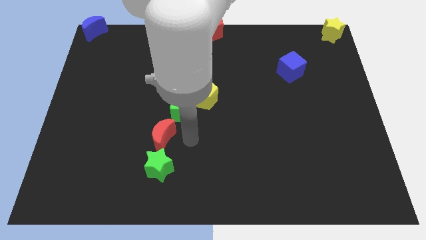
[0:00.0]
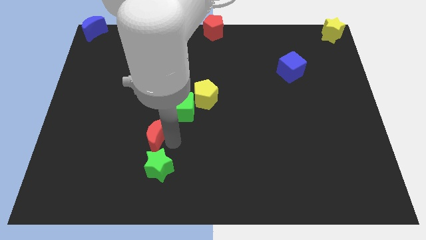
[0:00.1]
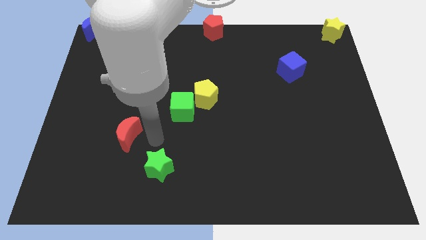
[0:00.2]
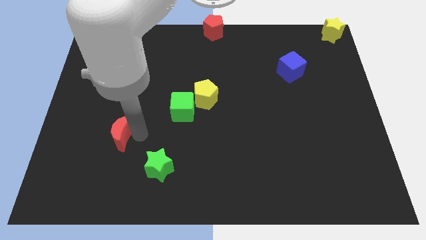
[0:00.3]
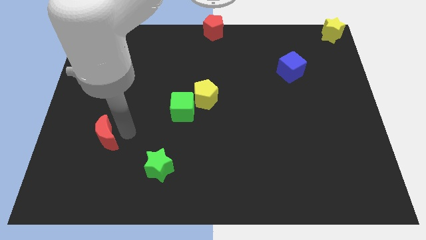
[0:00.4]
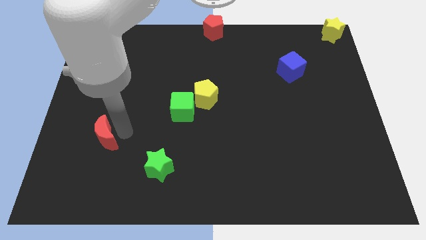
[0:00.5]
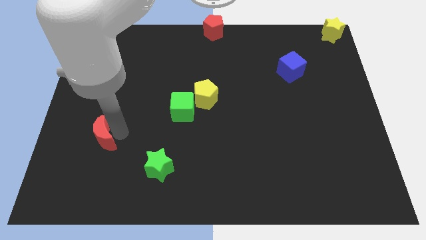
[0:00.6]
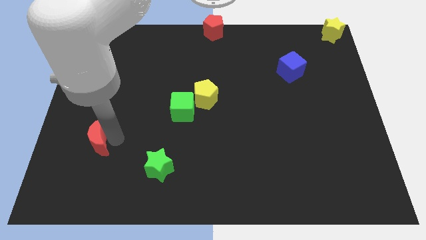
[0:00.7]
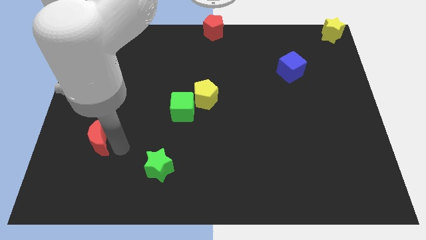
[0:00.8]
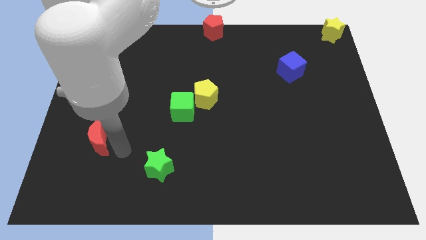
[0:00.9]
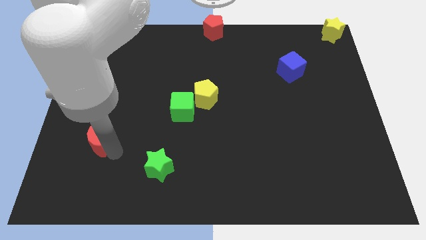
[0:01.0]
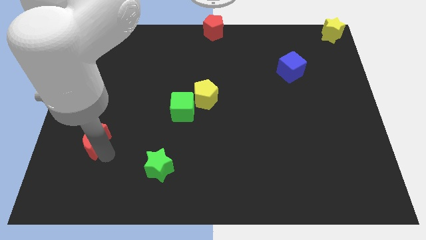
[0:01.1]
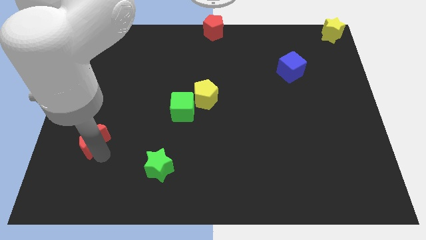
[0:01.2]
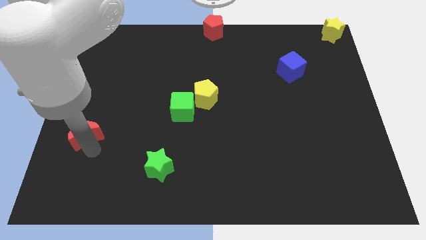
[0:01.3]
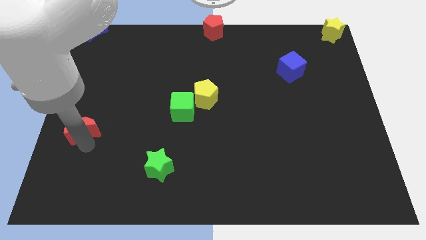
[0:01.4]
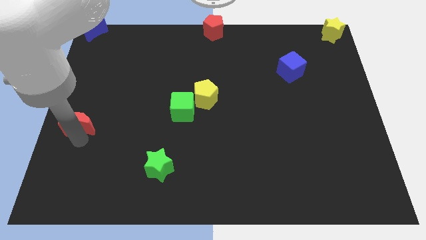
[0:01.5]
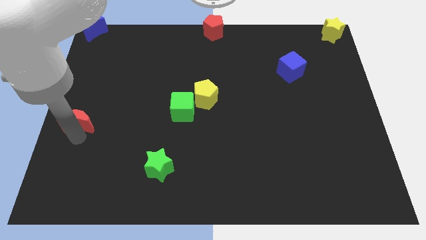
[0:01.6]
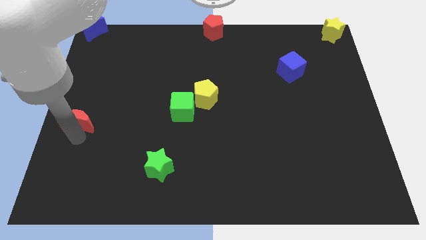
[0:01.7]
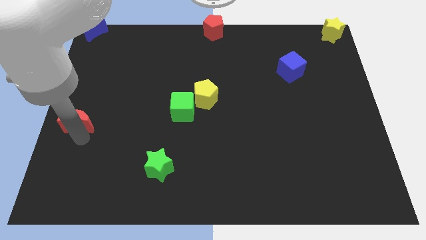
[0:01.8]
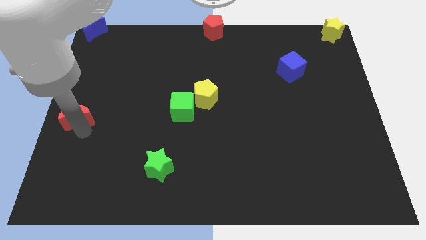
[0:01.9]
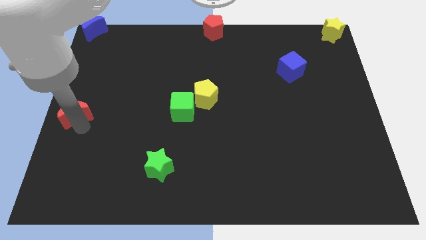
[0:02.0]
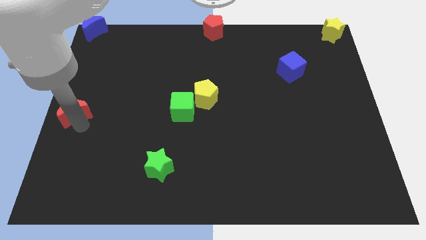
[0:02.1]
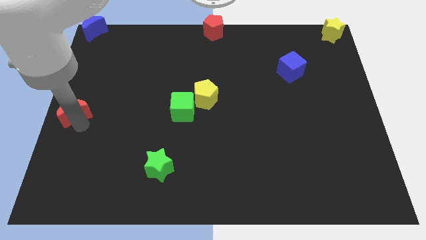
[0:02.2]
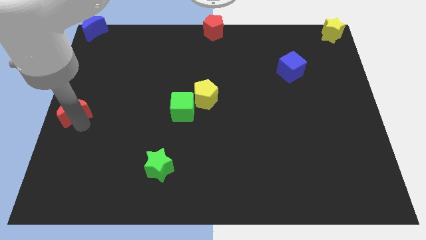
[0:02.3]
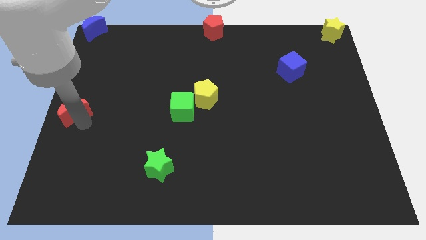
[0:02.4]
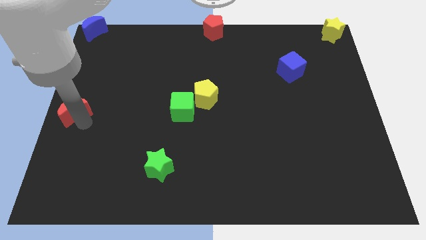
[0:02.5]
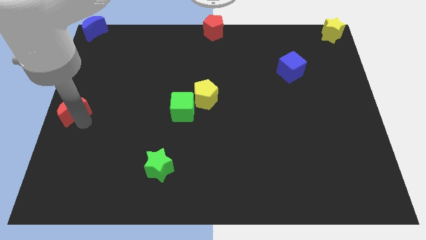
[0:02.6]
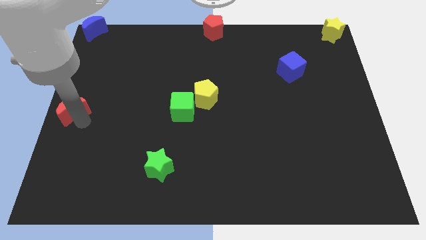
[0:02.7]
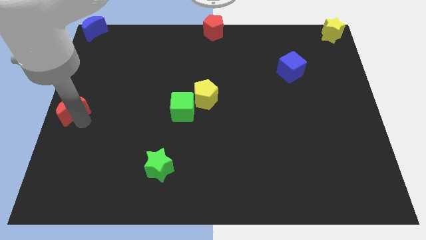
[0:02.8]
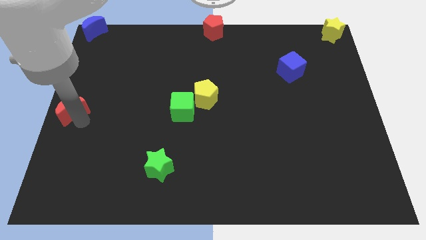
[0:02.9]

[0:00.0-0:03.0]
push the red crescent to the left center of the board

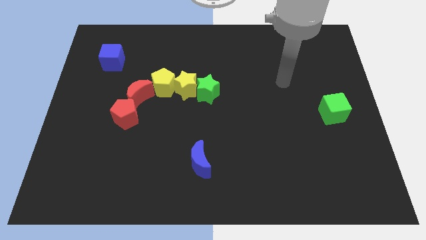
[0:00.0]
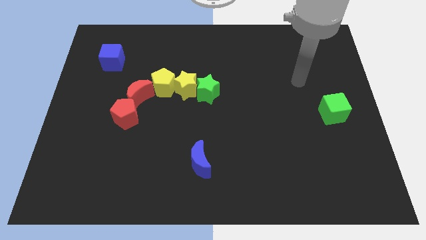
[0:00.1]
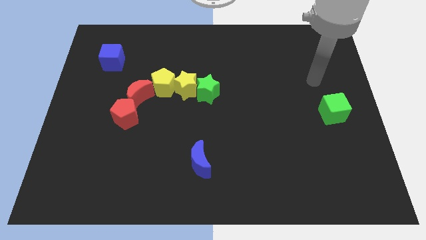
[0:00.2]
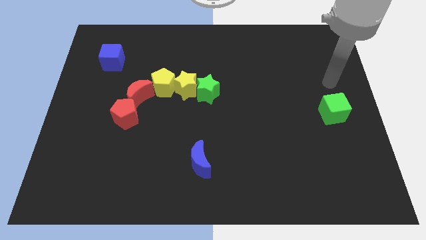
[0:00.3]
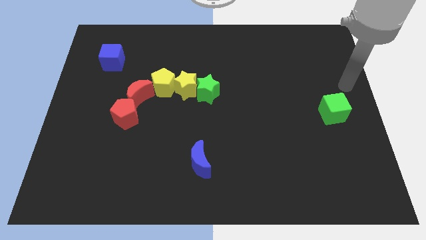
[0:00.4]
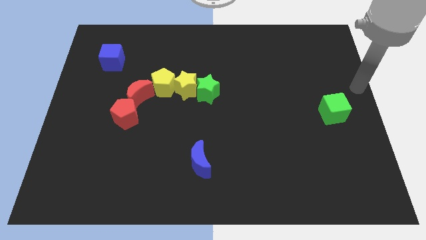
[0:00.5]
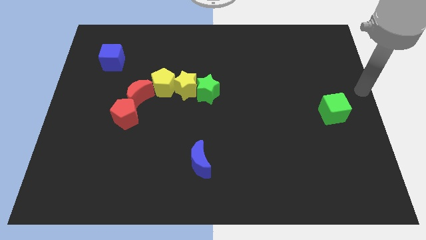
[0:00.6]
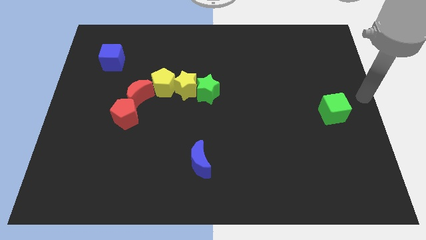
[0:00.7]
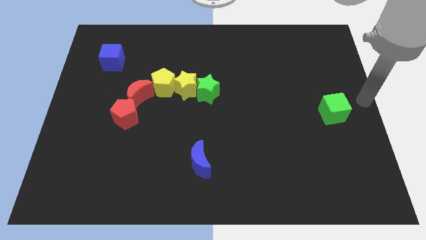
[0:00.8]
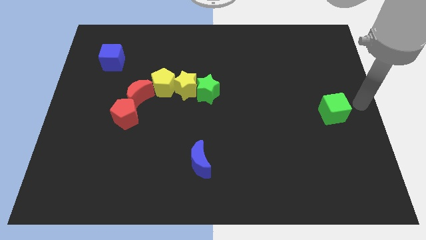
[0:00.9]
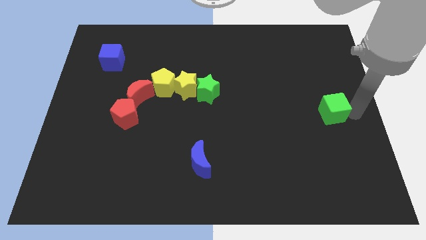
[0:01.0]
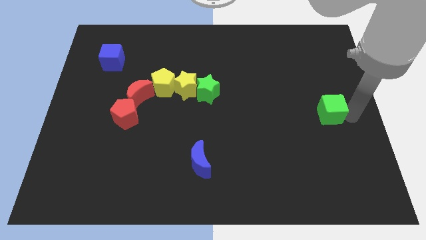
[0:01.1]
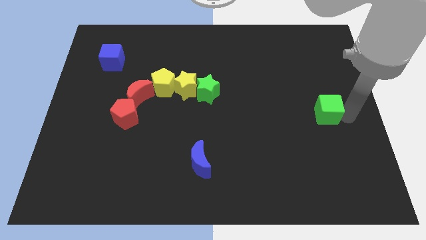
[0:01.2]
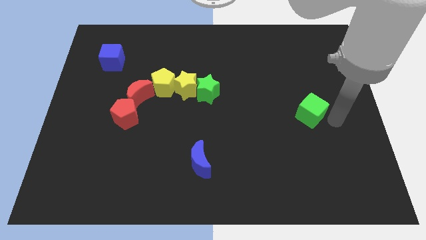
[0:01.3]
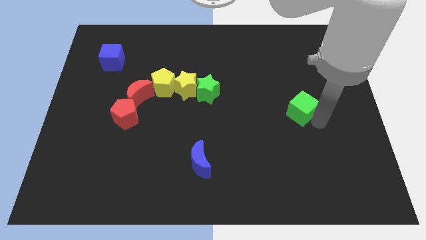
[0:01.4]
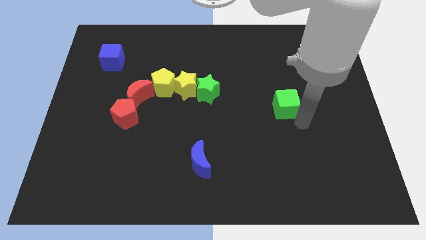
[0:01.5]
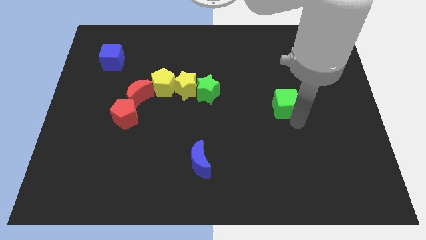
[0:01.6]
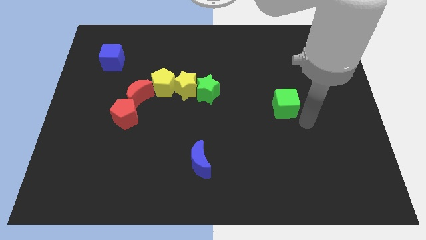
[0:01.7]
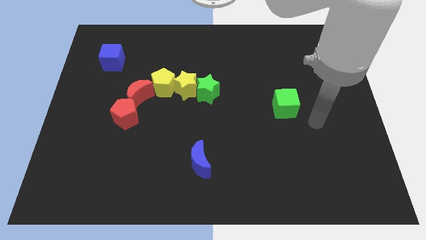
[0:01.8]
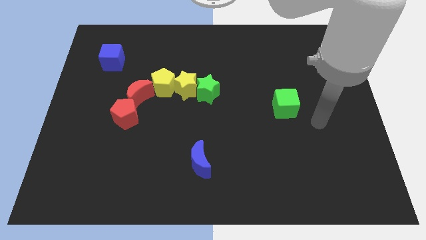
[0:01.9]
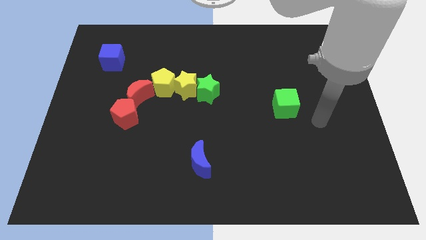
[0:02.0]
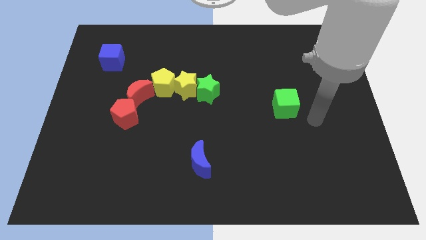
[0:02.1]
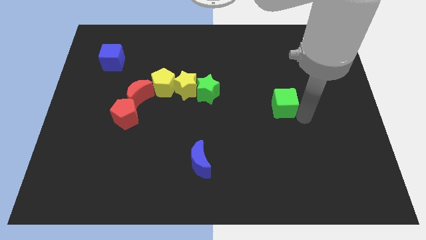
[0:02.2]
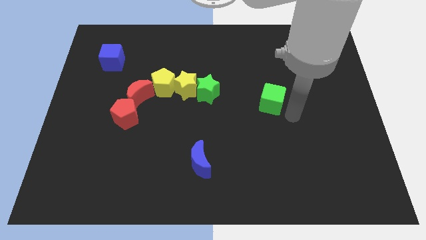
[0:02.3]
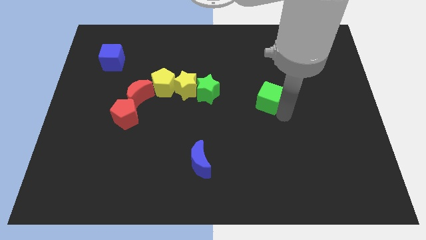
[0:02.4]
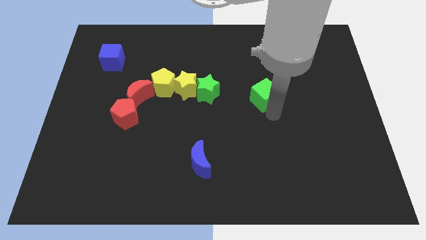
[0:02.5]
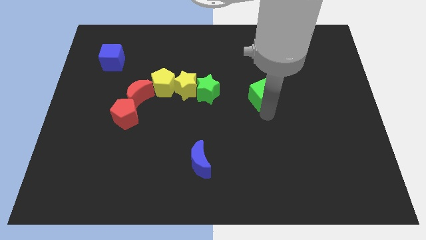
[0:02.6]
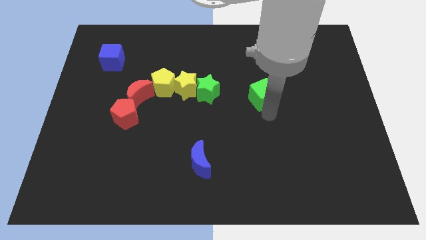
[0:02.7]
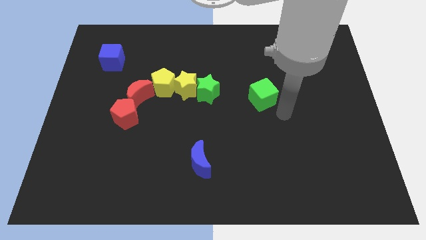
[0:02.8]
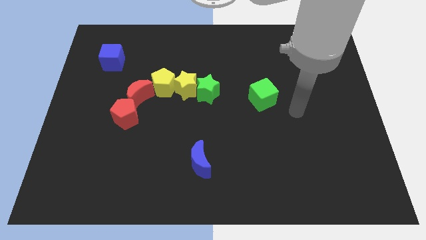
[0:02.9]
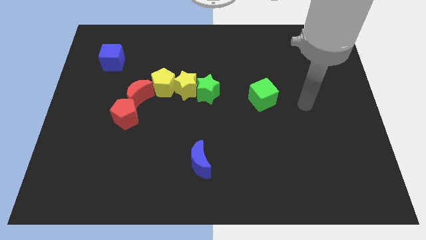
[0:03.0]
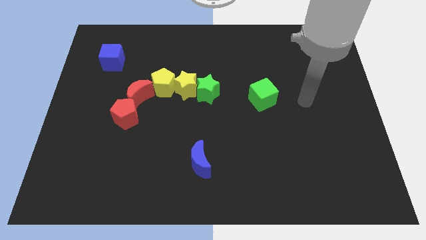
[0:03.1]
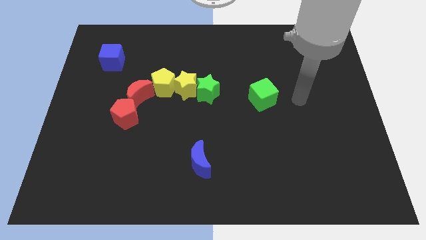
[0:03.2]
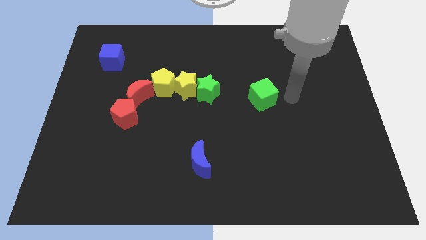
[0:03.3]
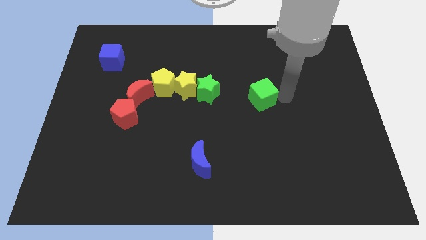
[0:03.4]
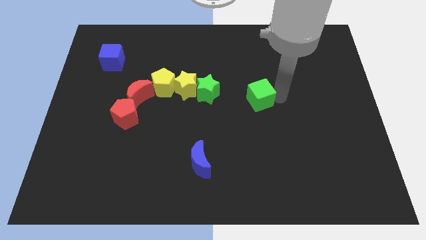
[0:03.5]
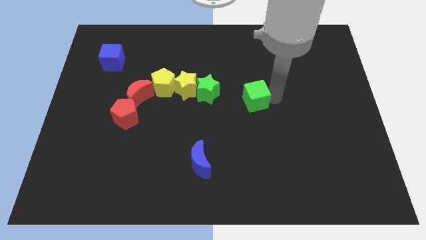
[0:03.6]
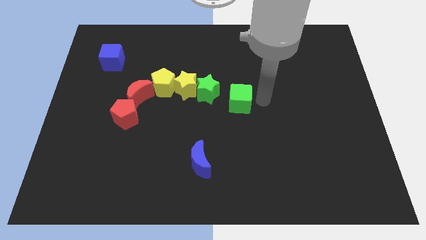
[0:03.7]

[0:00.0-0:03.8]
place the green cube right to the green star

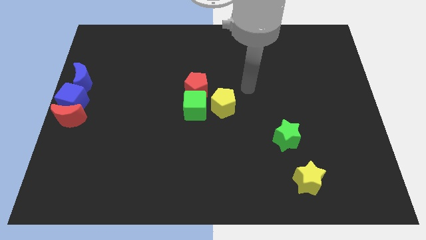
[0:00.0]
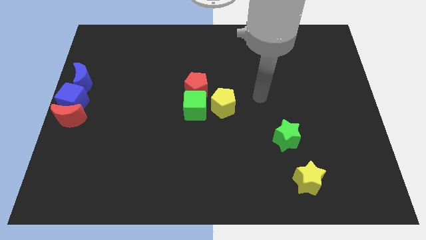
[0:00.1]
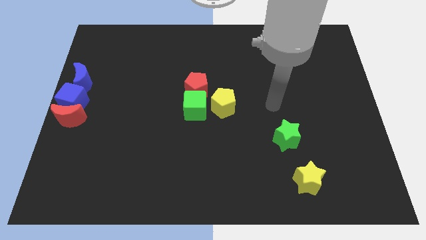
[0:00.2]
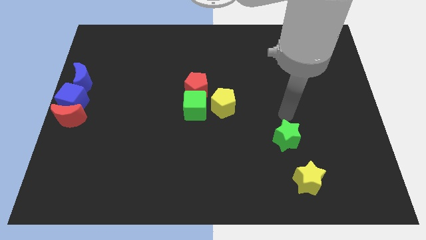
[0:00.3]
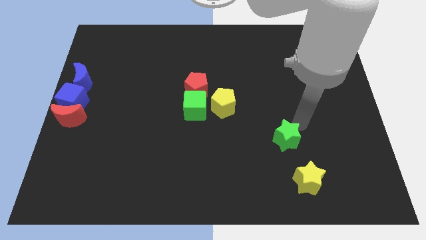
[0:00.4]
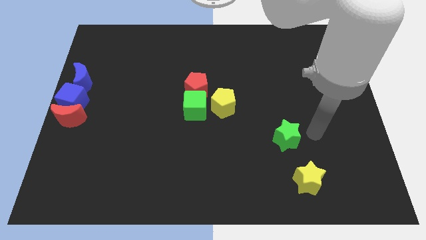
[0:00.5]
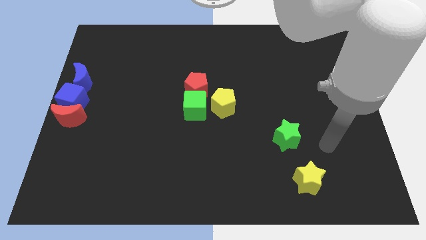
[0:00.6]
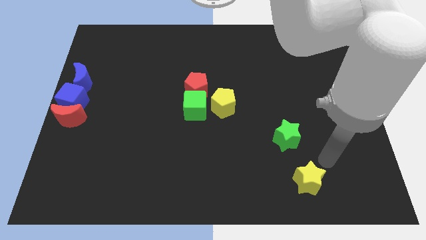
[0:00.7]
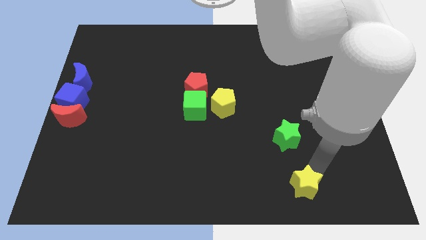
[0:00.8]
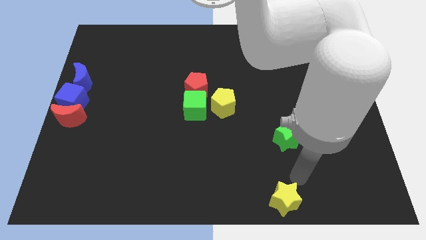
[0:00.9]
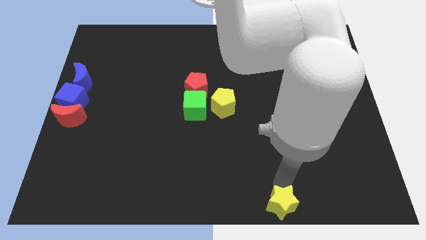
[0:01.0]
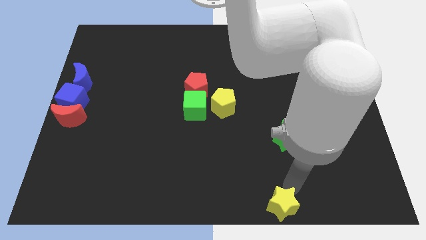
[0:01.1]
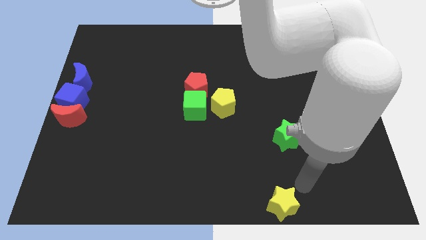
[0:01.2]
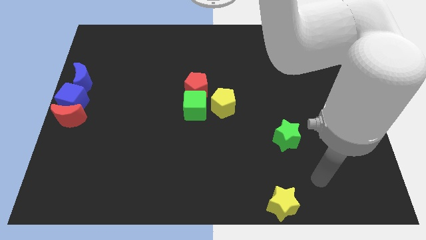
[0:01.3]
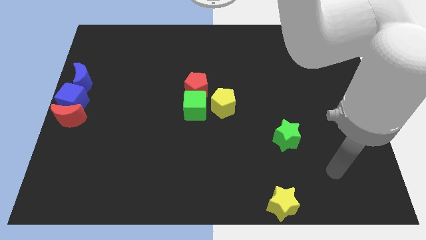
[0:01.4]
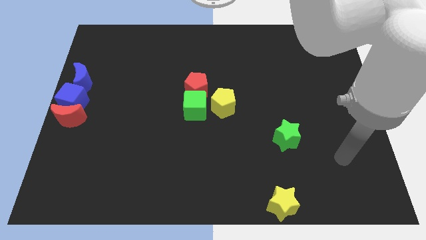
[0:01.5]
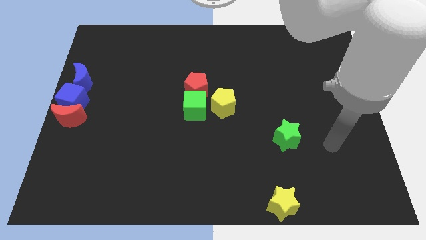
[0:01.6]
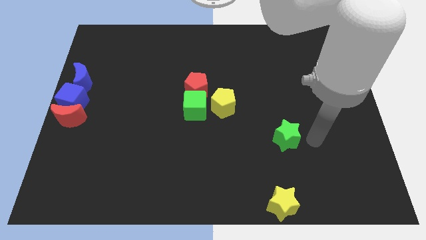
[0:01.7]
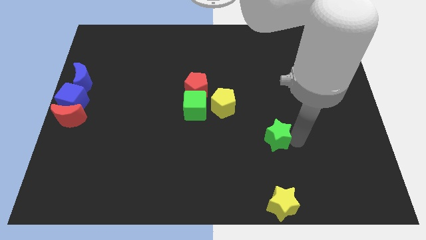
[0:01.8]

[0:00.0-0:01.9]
move the yellow star to the bottom of the board

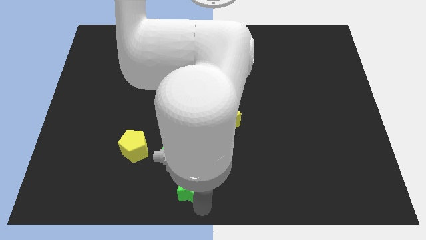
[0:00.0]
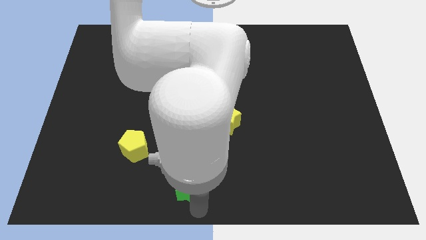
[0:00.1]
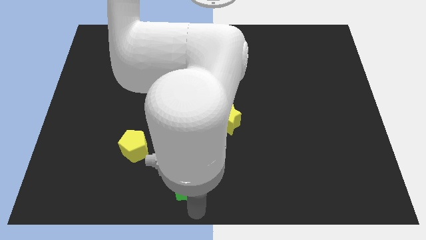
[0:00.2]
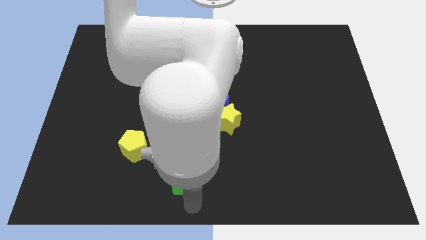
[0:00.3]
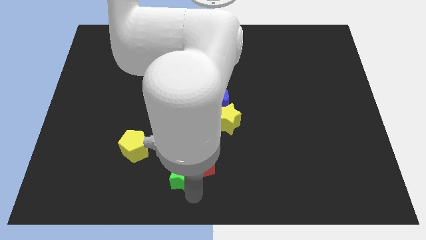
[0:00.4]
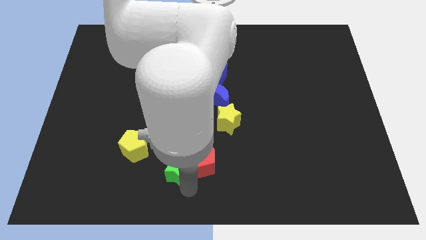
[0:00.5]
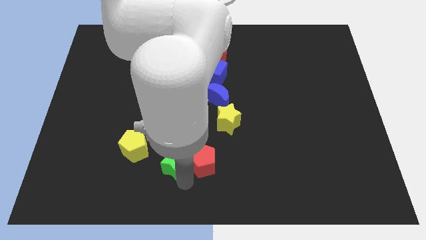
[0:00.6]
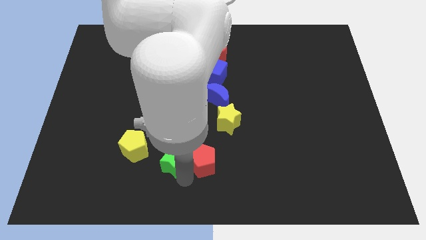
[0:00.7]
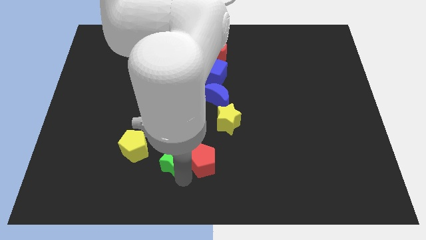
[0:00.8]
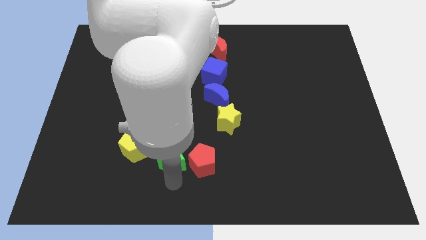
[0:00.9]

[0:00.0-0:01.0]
push the green star down to the green cube
